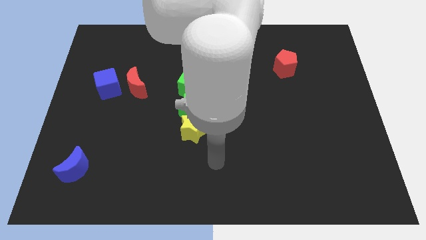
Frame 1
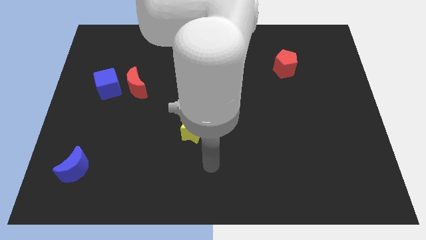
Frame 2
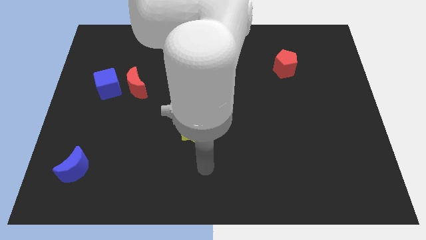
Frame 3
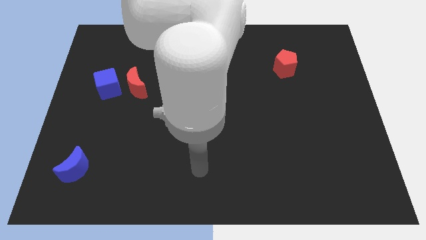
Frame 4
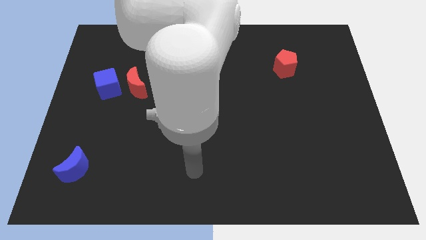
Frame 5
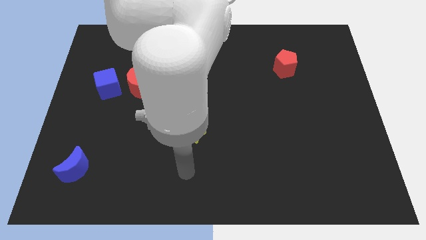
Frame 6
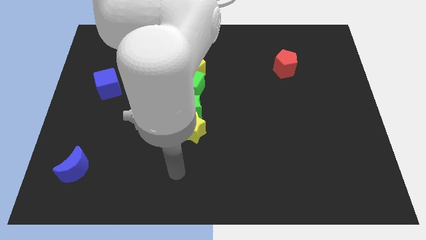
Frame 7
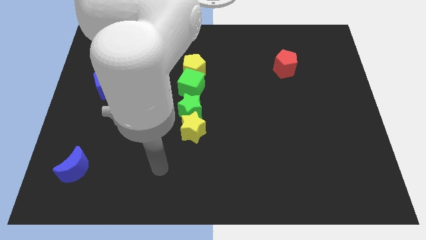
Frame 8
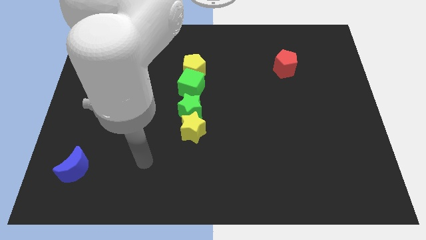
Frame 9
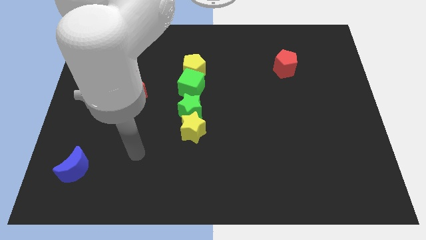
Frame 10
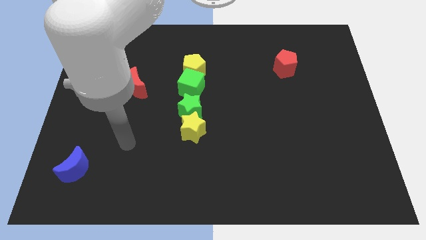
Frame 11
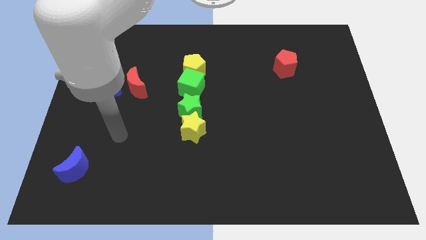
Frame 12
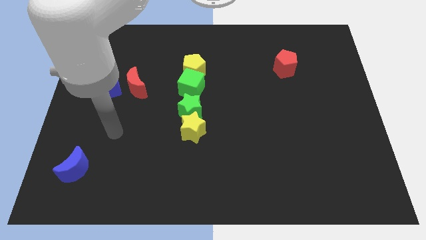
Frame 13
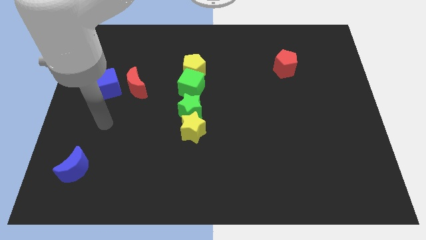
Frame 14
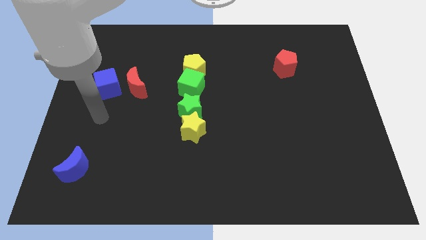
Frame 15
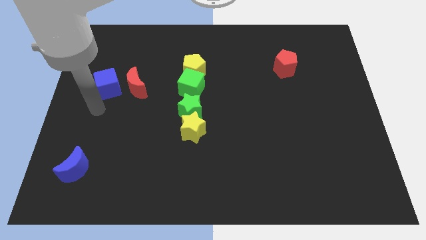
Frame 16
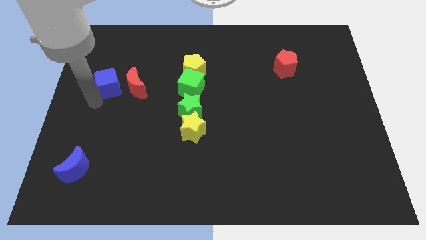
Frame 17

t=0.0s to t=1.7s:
place your arm to the bottom of blue cube

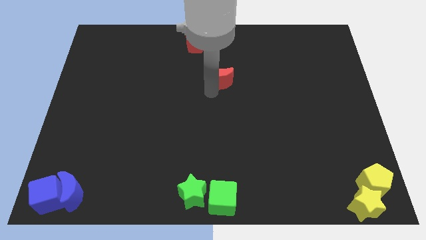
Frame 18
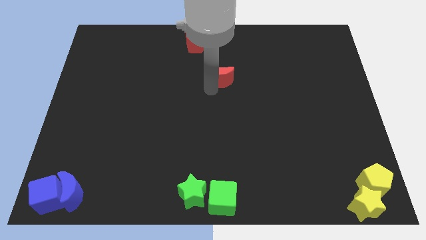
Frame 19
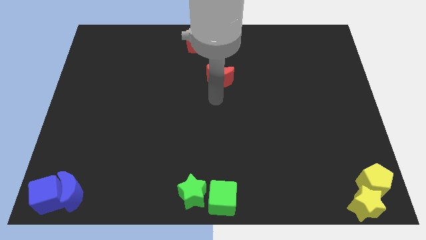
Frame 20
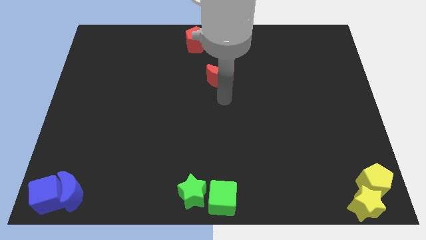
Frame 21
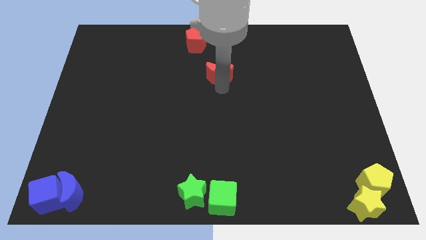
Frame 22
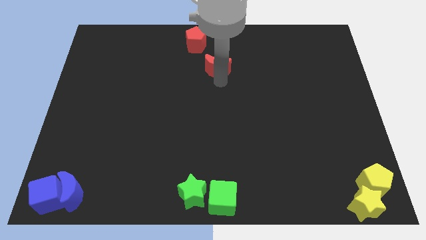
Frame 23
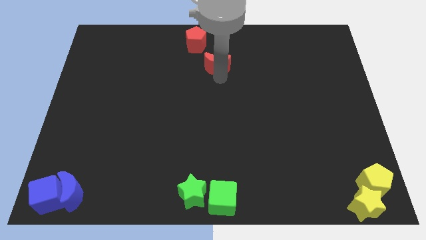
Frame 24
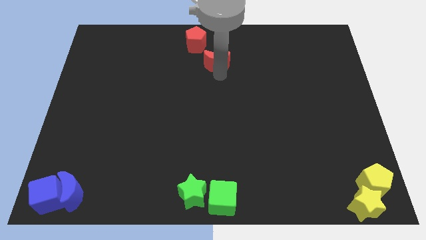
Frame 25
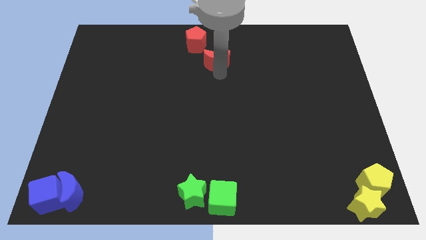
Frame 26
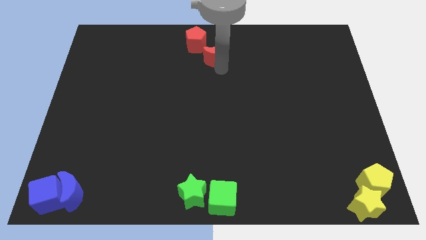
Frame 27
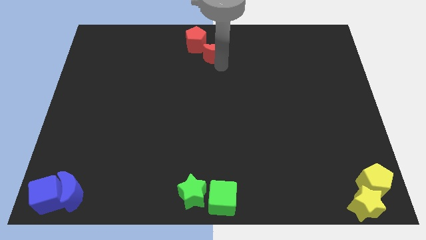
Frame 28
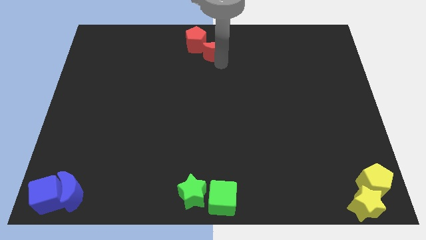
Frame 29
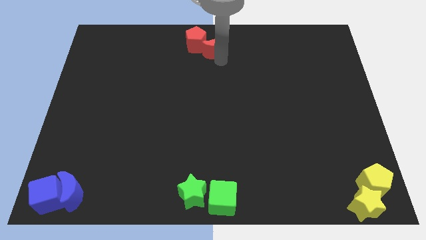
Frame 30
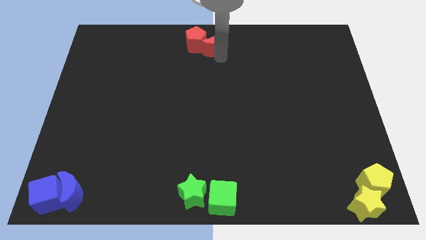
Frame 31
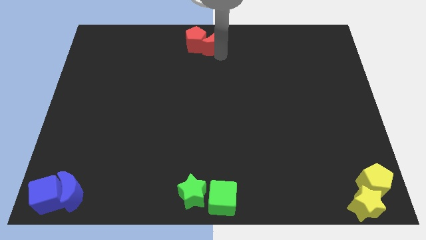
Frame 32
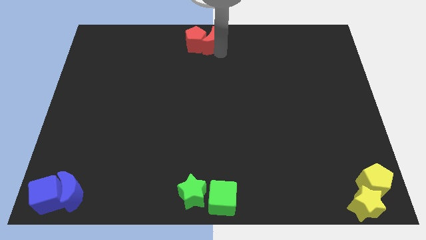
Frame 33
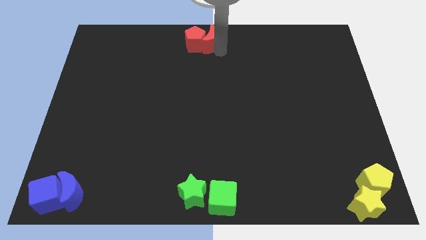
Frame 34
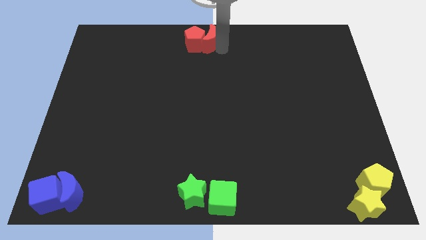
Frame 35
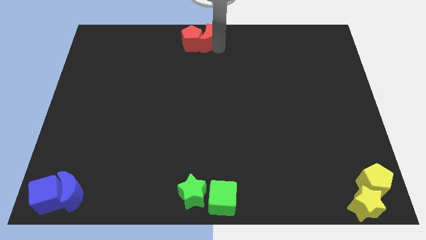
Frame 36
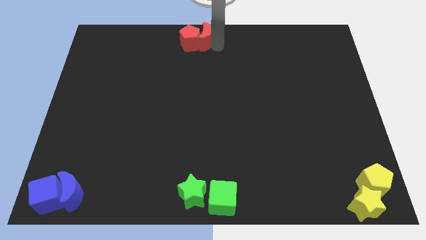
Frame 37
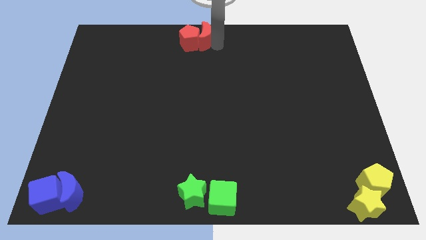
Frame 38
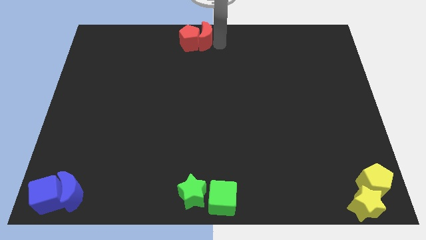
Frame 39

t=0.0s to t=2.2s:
push the red moon towards the top center of the board

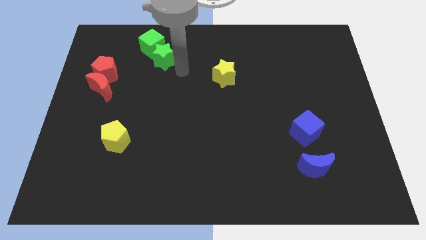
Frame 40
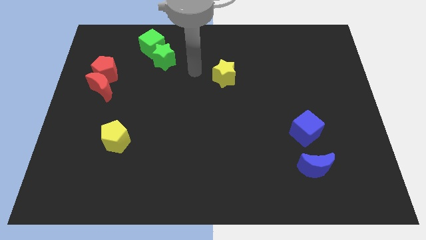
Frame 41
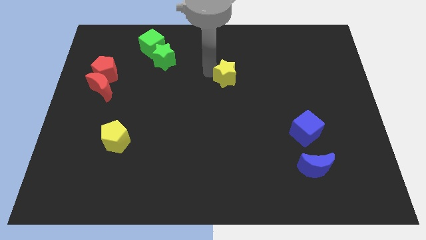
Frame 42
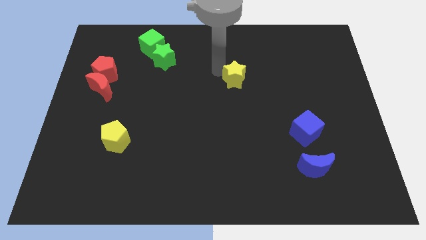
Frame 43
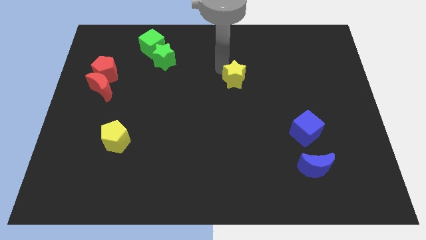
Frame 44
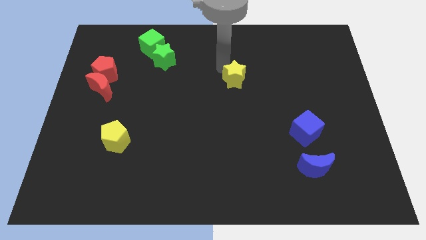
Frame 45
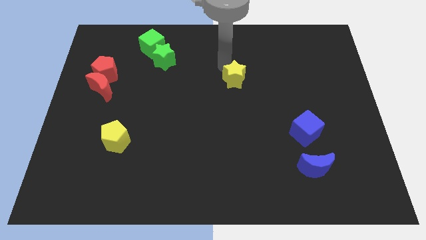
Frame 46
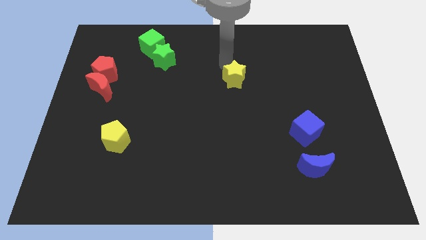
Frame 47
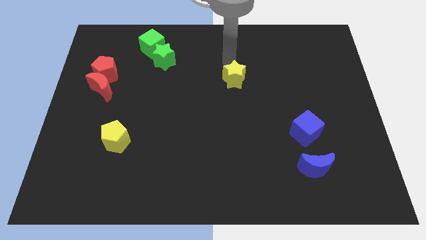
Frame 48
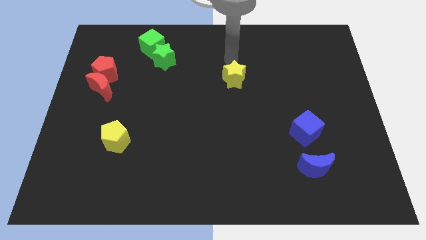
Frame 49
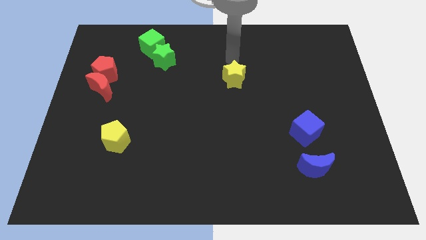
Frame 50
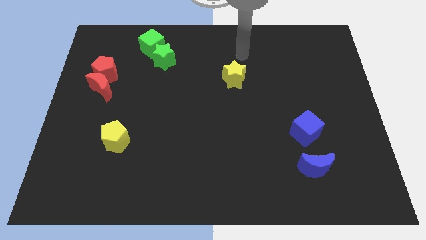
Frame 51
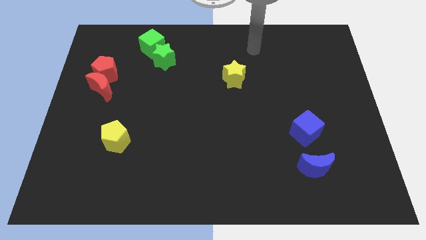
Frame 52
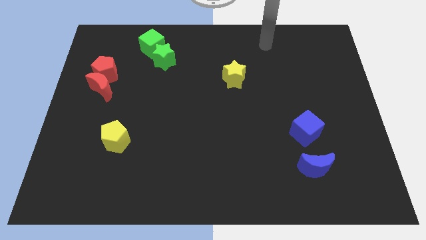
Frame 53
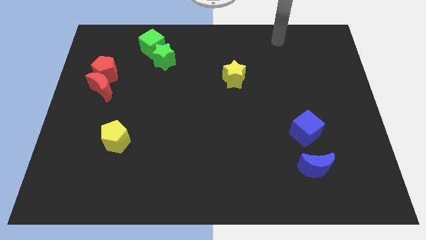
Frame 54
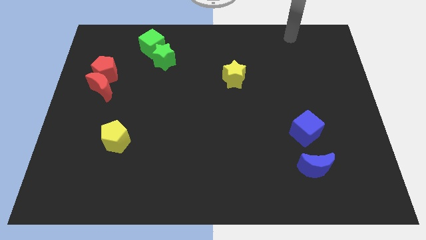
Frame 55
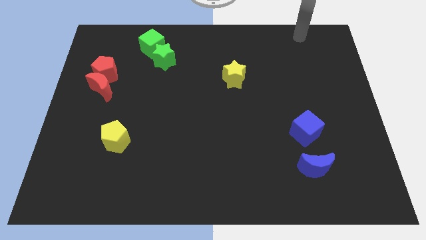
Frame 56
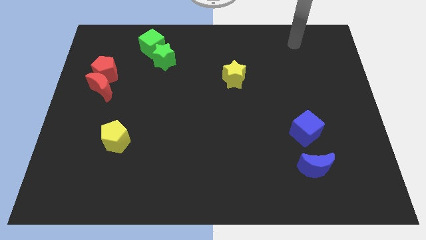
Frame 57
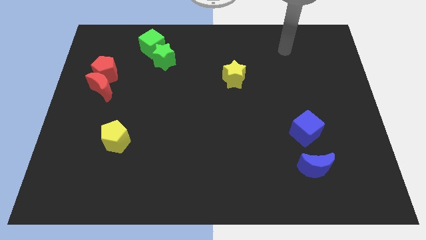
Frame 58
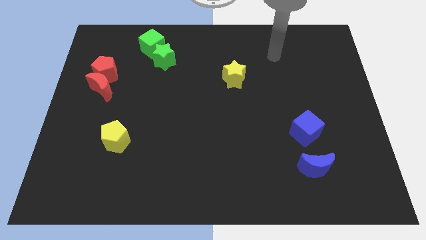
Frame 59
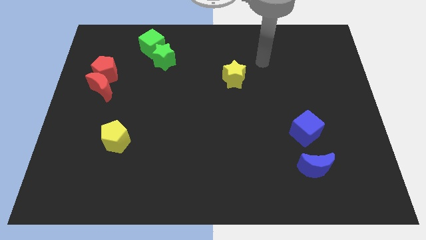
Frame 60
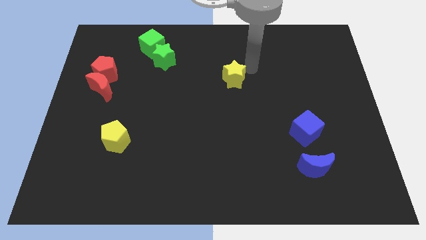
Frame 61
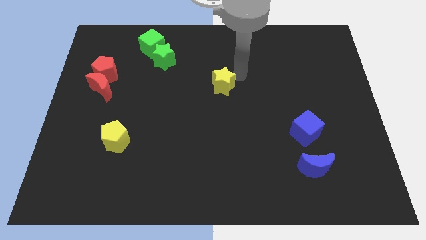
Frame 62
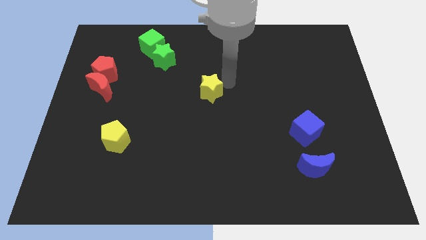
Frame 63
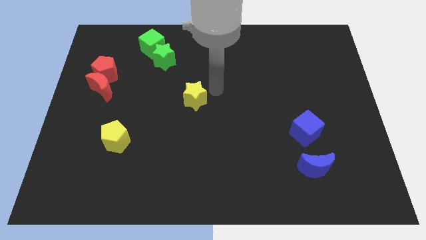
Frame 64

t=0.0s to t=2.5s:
push the yellow star to the bottom right of the green star

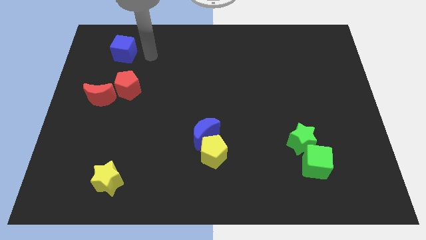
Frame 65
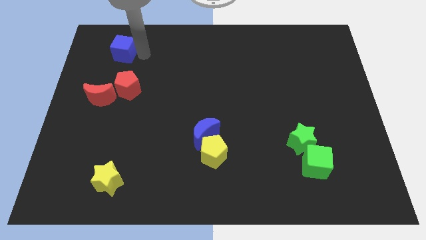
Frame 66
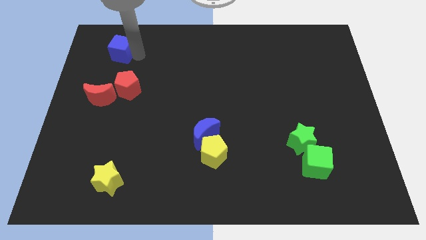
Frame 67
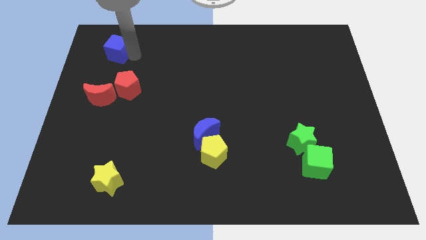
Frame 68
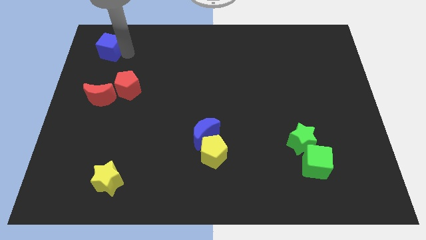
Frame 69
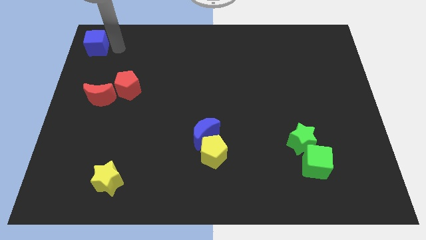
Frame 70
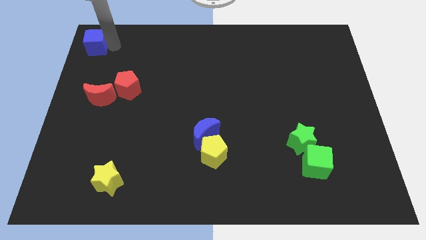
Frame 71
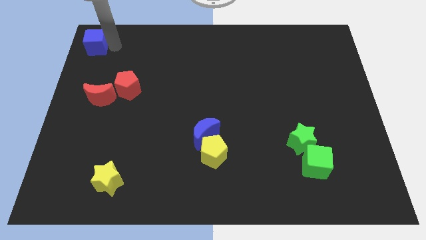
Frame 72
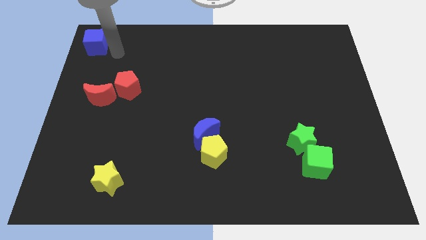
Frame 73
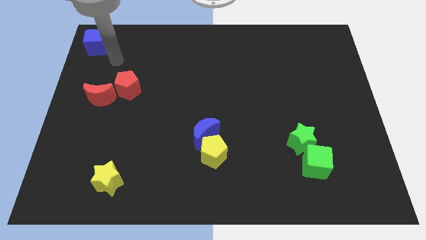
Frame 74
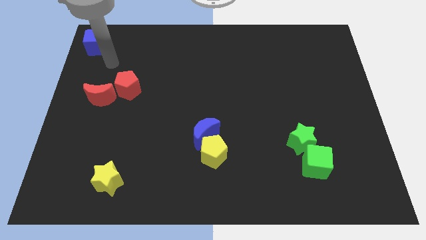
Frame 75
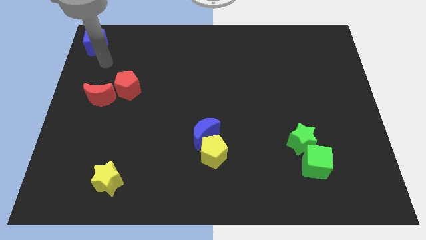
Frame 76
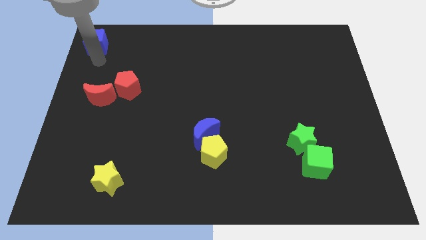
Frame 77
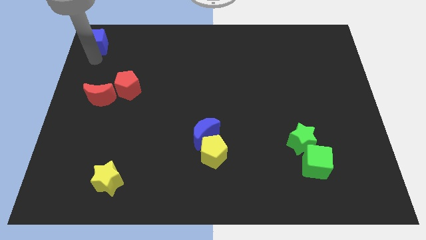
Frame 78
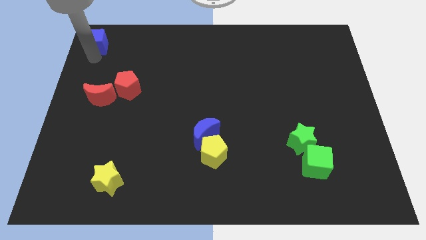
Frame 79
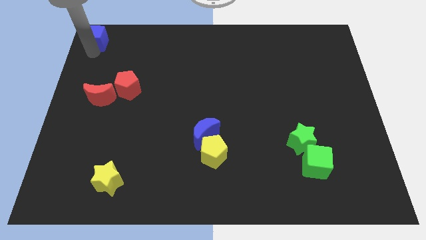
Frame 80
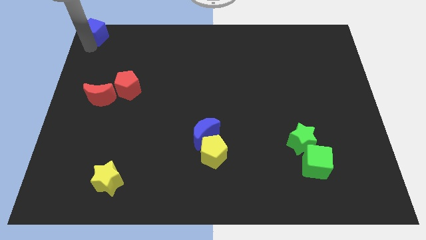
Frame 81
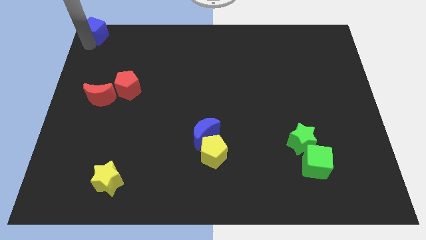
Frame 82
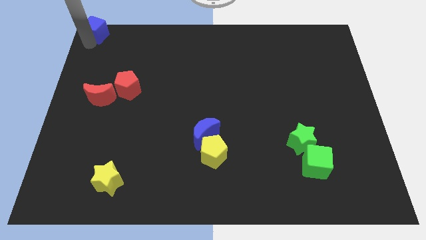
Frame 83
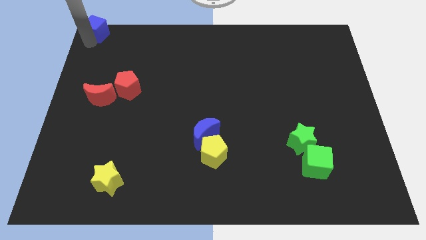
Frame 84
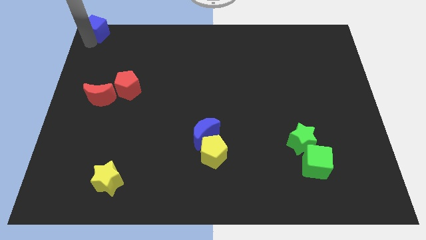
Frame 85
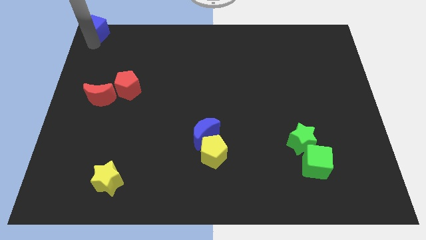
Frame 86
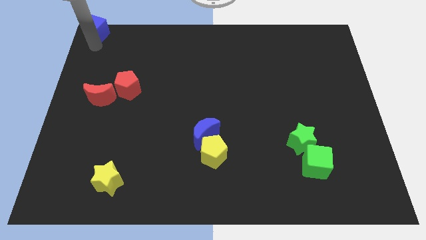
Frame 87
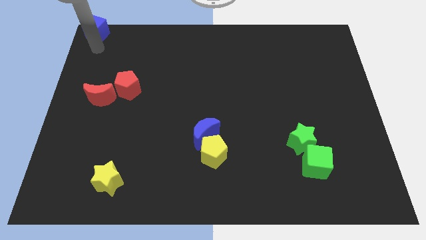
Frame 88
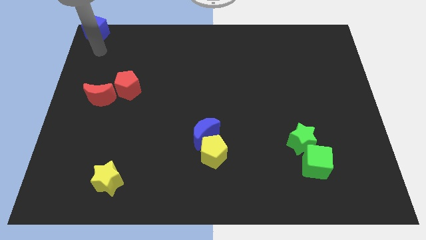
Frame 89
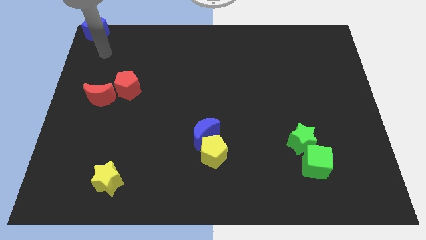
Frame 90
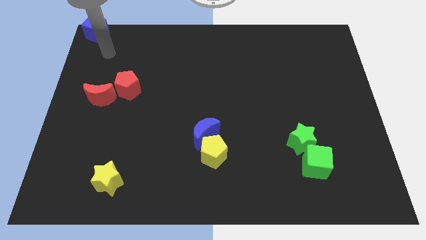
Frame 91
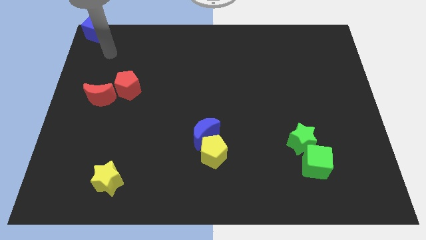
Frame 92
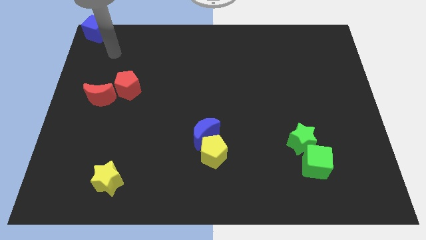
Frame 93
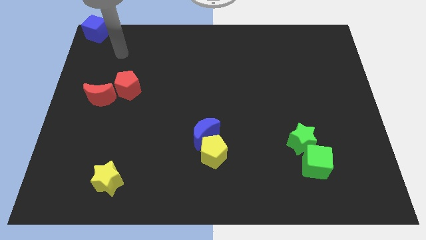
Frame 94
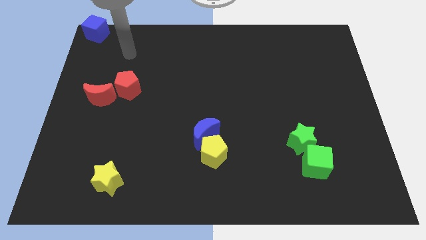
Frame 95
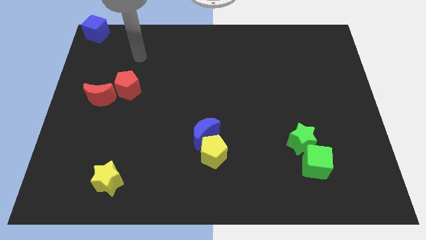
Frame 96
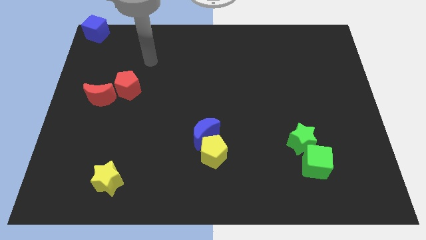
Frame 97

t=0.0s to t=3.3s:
slide the blue cube to the top left of the board
